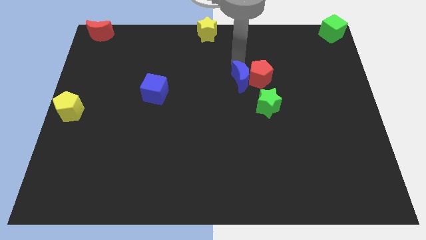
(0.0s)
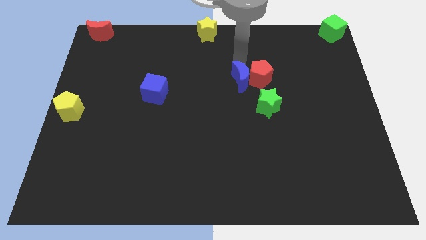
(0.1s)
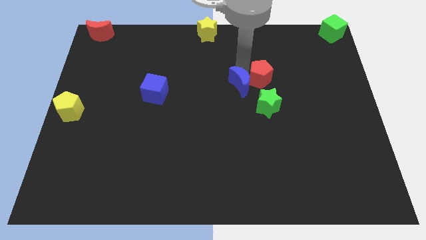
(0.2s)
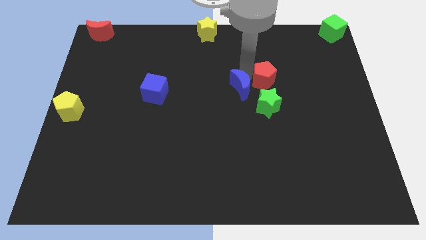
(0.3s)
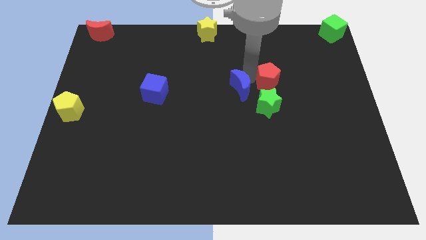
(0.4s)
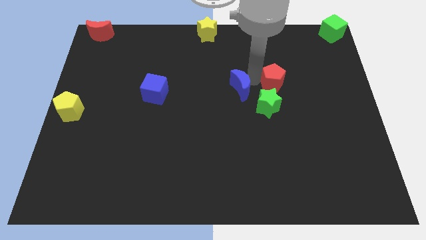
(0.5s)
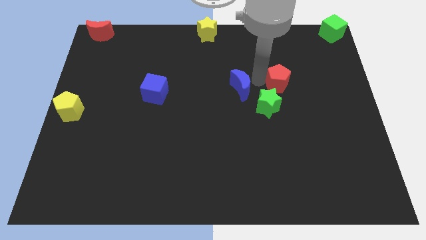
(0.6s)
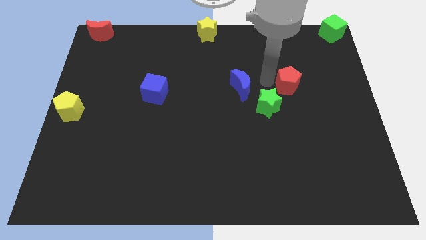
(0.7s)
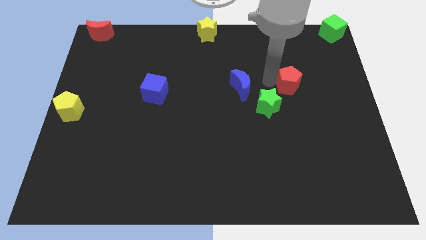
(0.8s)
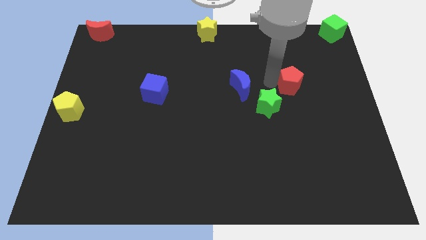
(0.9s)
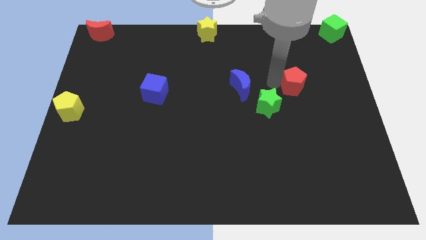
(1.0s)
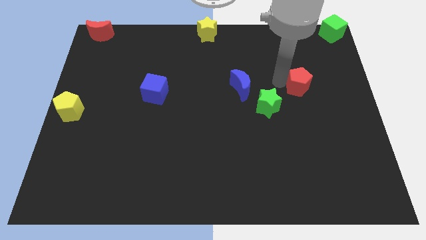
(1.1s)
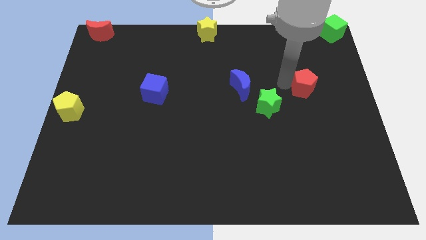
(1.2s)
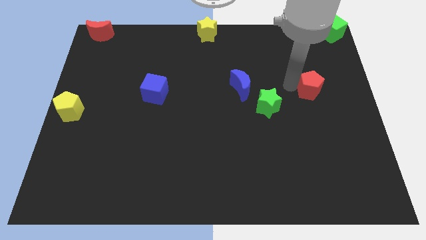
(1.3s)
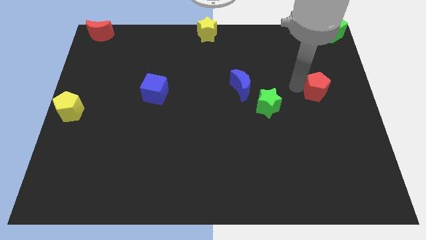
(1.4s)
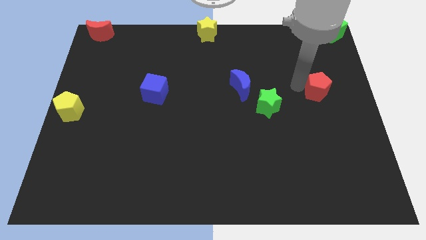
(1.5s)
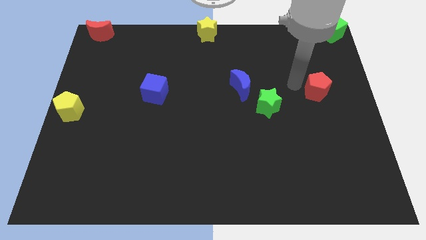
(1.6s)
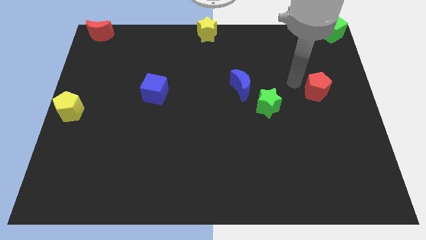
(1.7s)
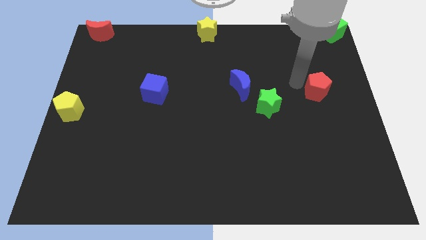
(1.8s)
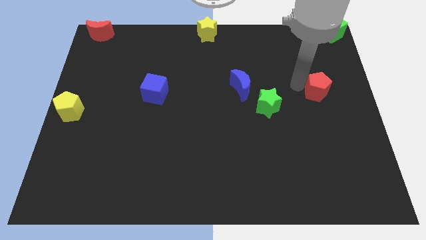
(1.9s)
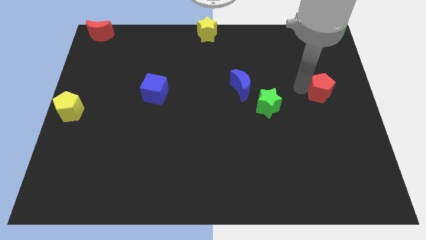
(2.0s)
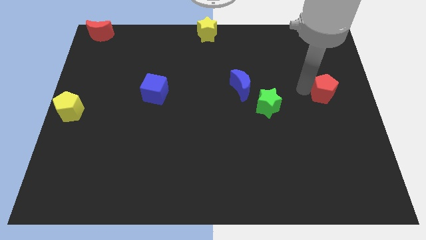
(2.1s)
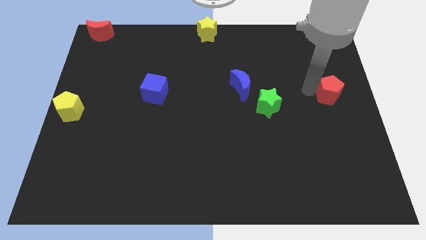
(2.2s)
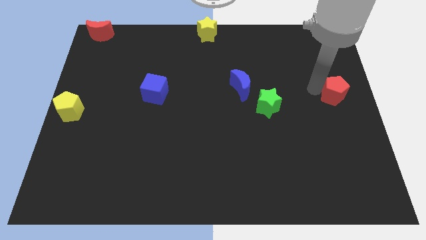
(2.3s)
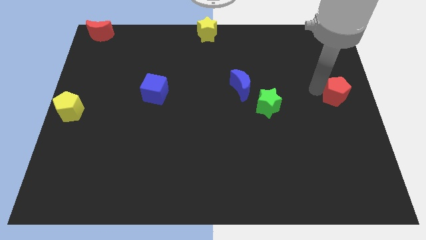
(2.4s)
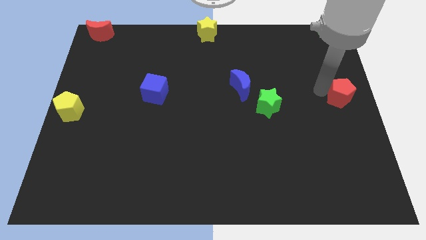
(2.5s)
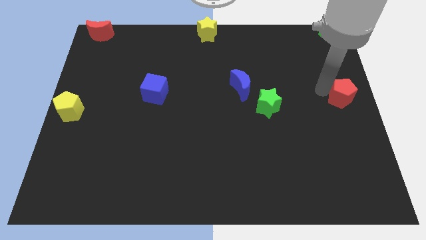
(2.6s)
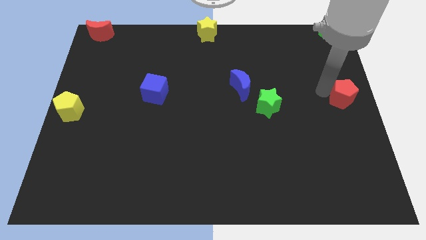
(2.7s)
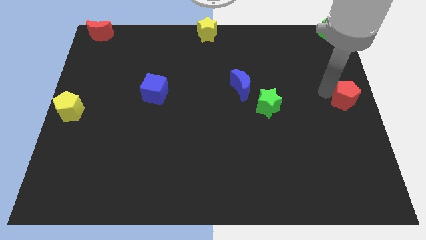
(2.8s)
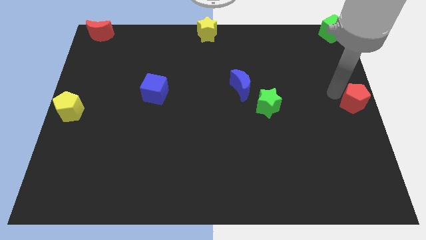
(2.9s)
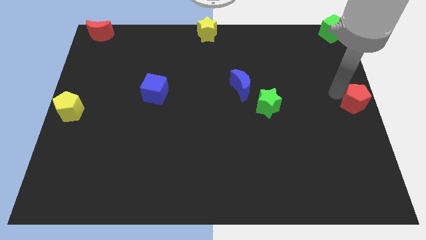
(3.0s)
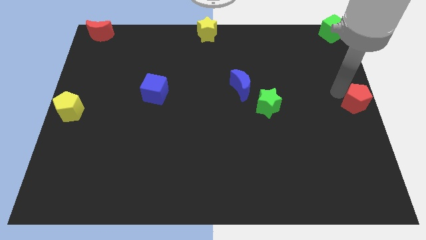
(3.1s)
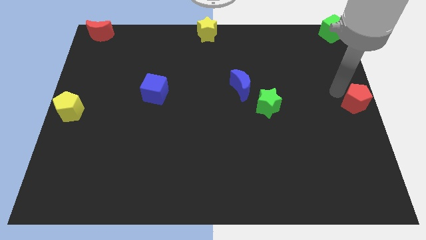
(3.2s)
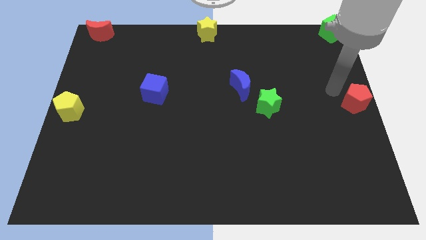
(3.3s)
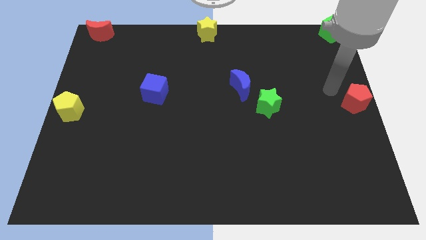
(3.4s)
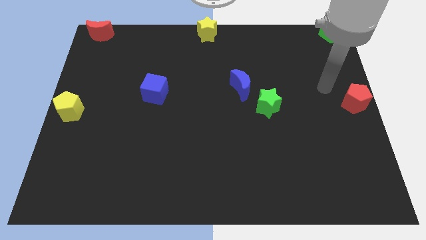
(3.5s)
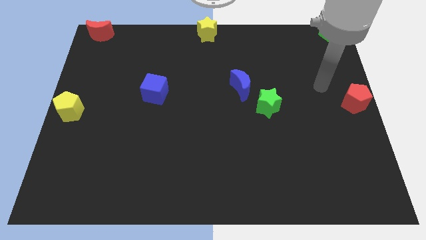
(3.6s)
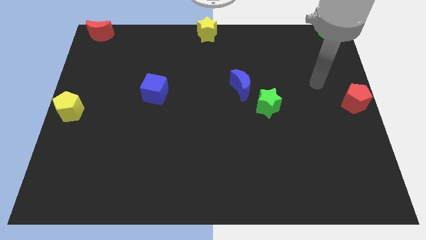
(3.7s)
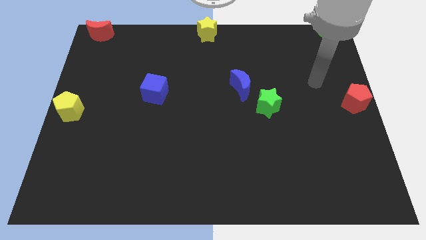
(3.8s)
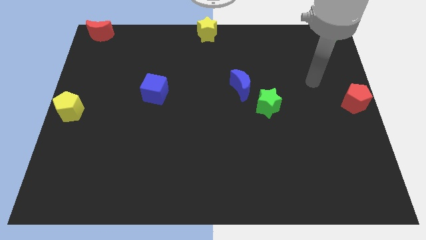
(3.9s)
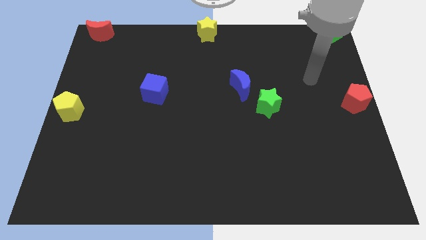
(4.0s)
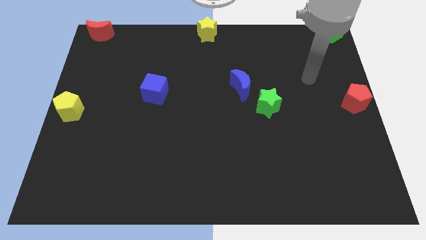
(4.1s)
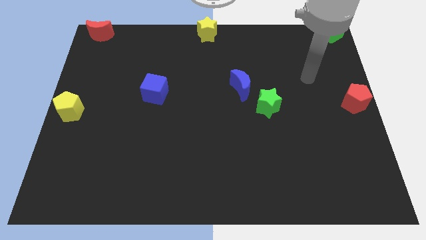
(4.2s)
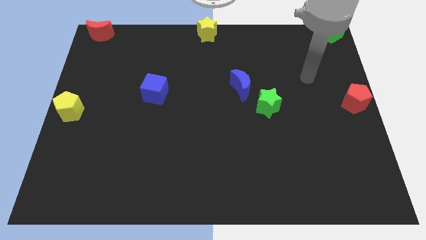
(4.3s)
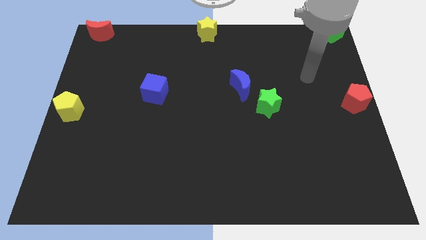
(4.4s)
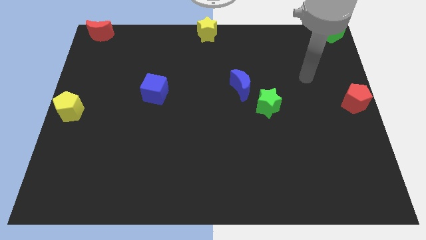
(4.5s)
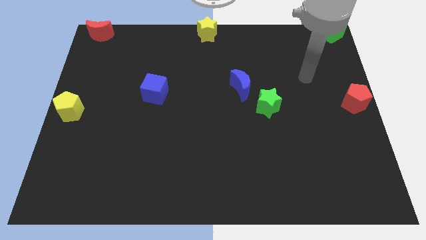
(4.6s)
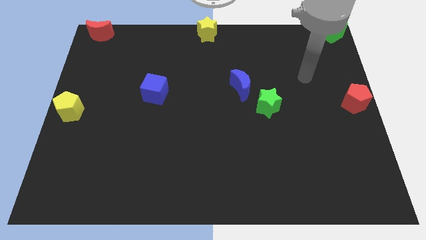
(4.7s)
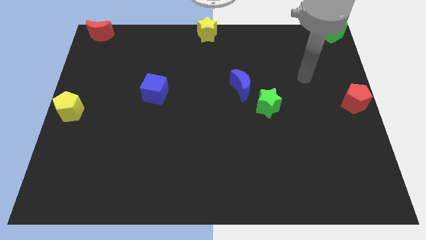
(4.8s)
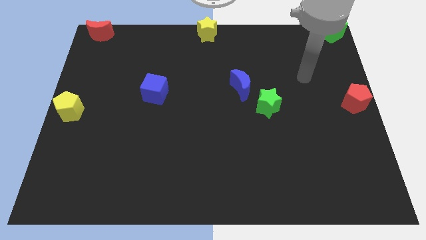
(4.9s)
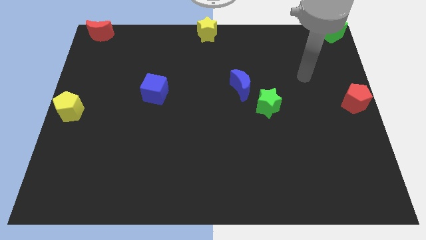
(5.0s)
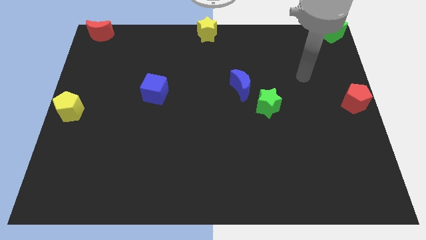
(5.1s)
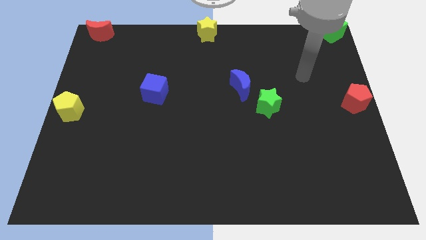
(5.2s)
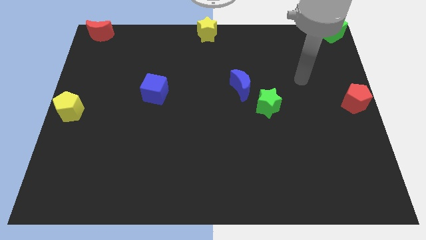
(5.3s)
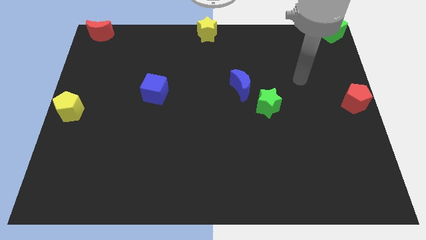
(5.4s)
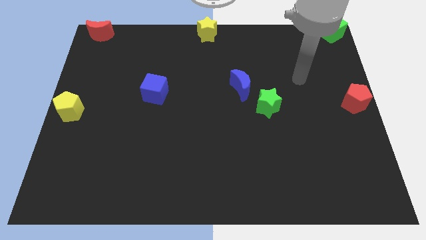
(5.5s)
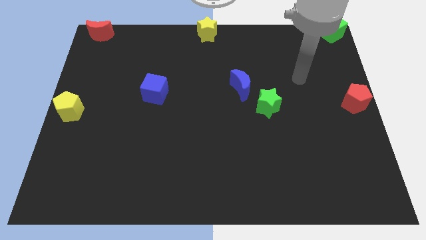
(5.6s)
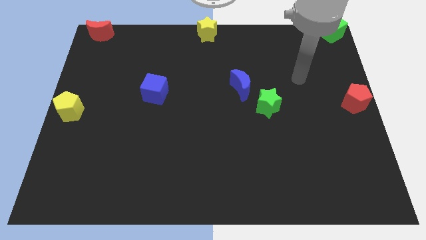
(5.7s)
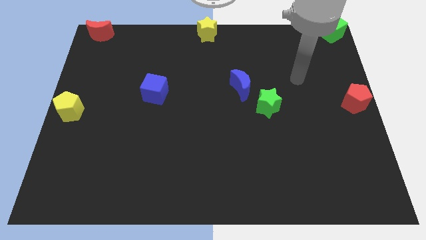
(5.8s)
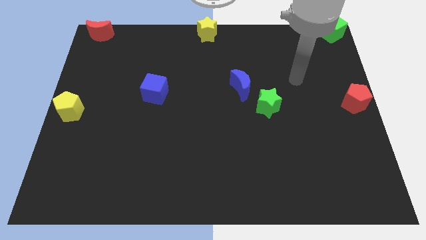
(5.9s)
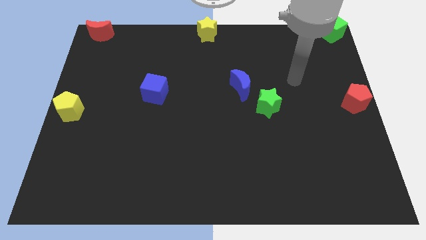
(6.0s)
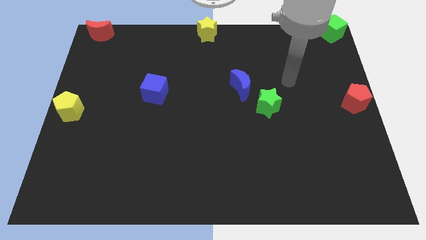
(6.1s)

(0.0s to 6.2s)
move the red pentagon at the right center

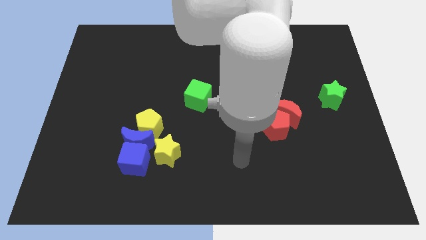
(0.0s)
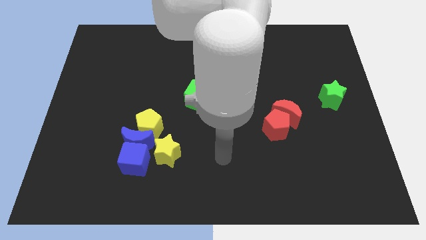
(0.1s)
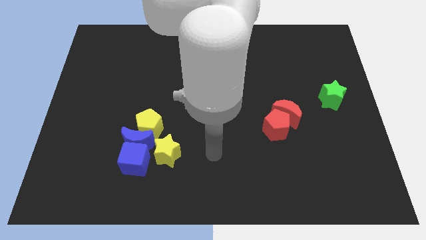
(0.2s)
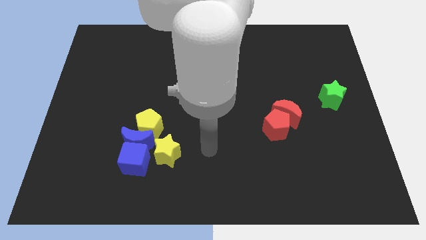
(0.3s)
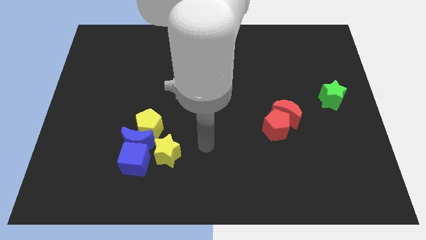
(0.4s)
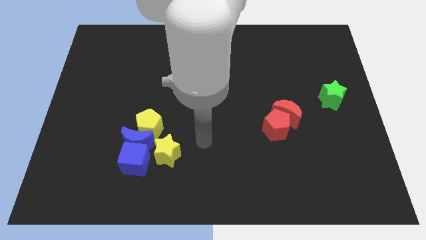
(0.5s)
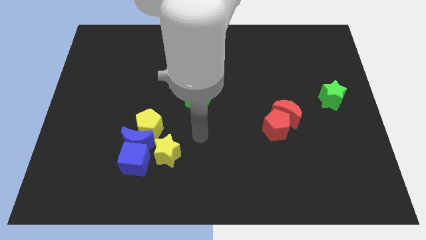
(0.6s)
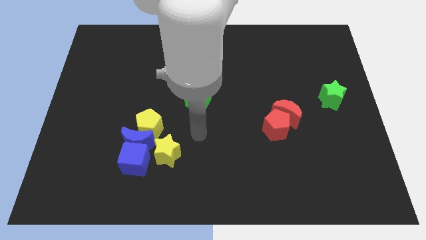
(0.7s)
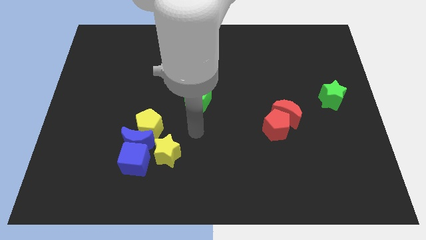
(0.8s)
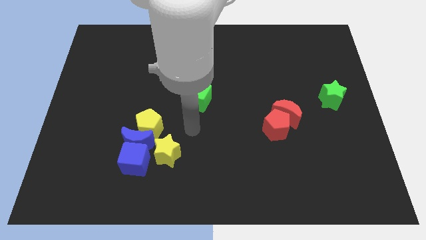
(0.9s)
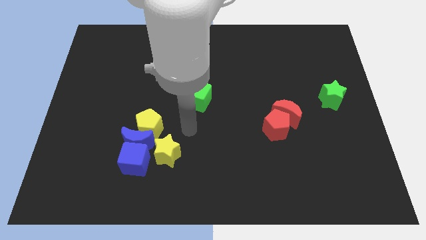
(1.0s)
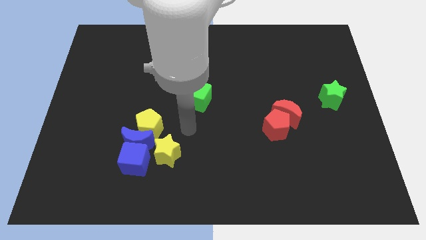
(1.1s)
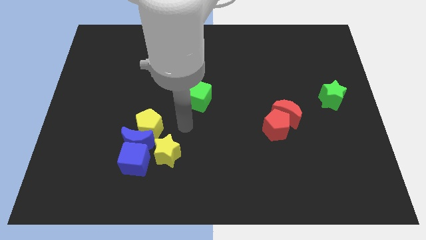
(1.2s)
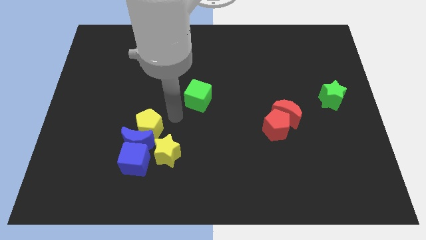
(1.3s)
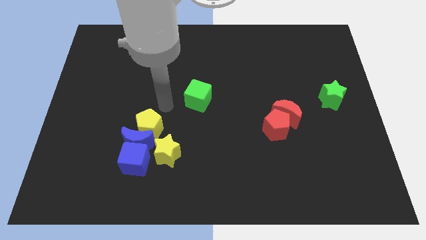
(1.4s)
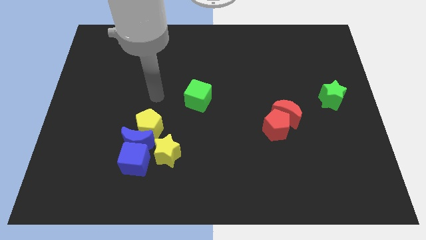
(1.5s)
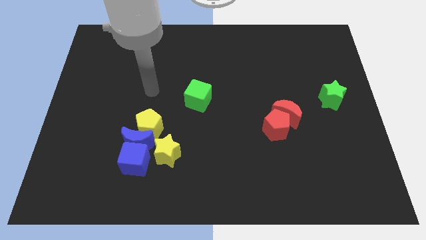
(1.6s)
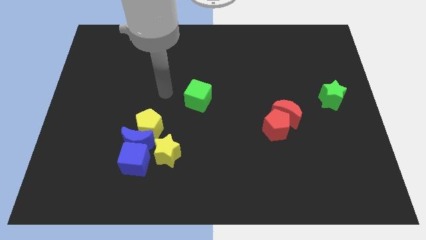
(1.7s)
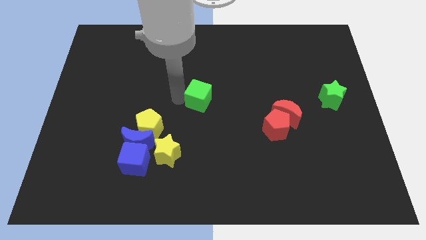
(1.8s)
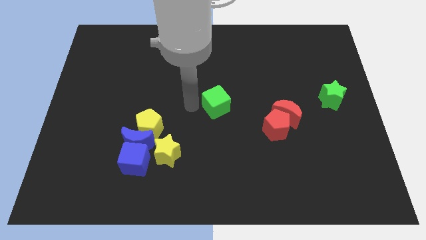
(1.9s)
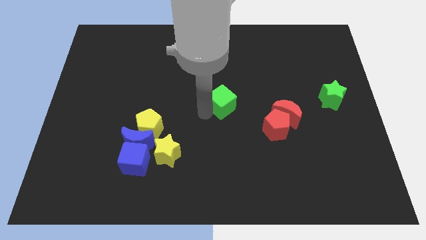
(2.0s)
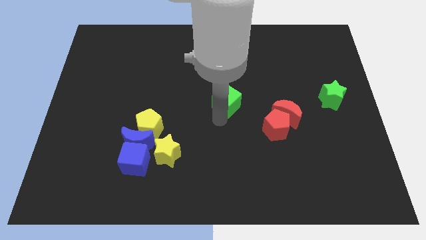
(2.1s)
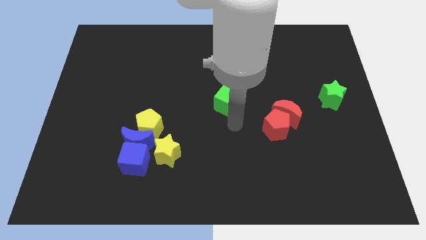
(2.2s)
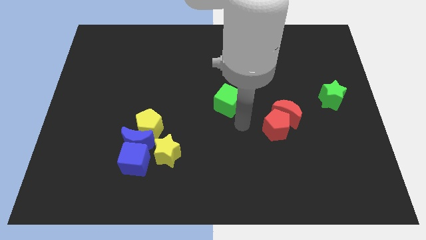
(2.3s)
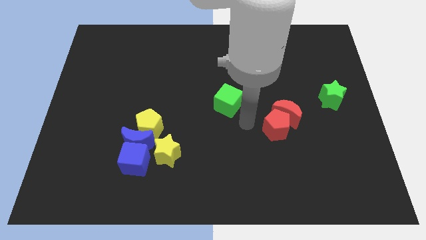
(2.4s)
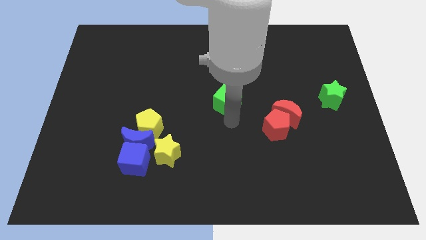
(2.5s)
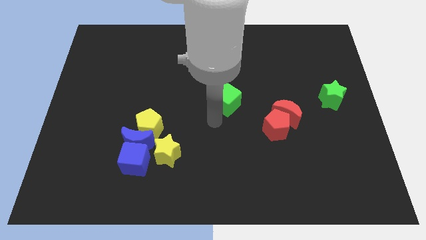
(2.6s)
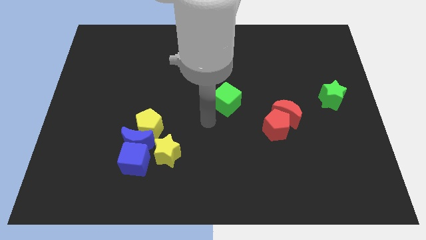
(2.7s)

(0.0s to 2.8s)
push the green cube at the center of the board
